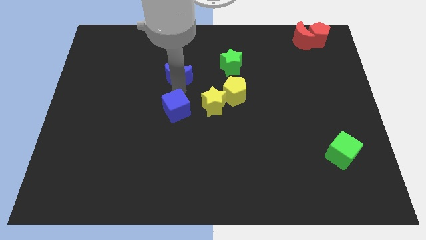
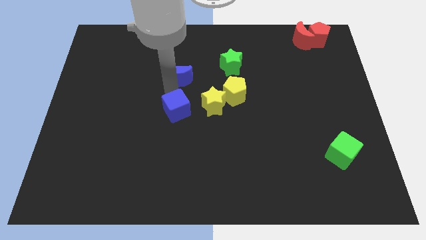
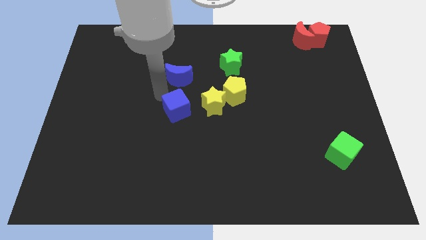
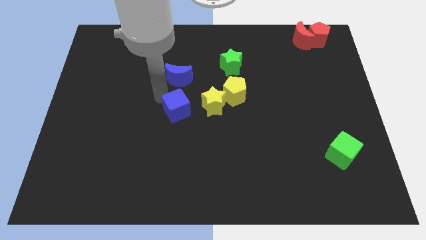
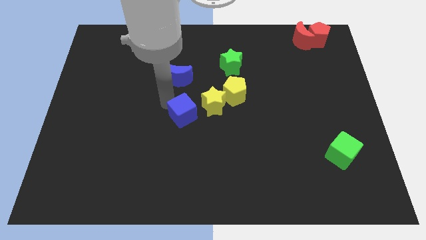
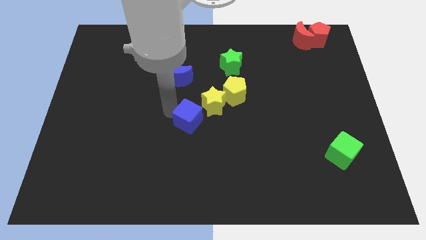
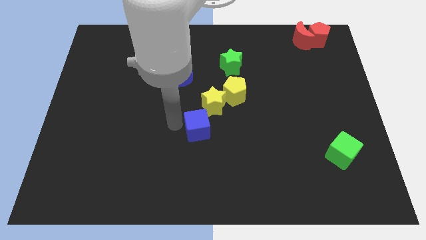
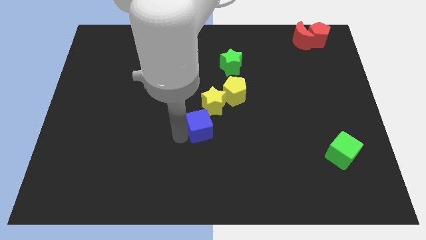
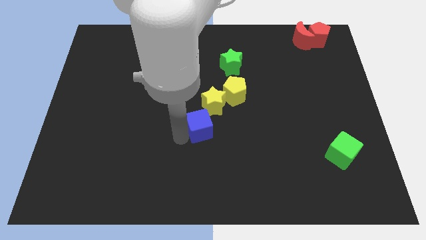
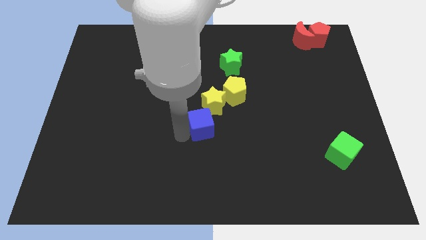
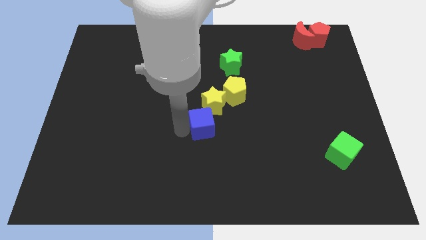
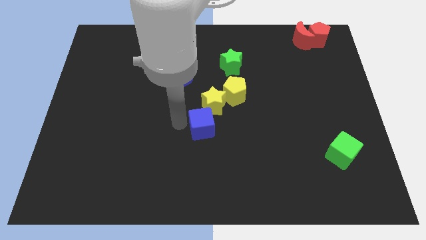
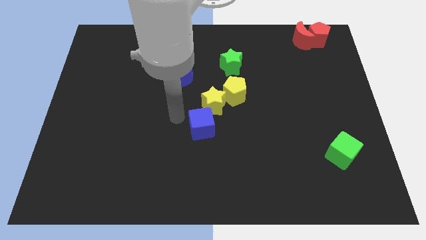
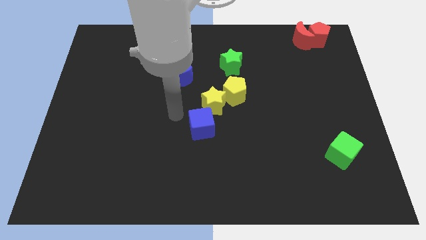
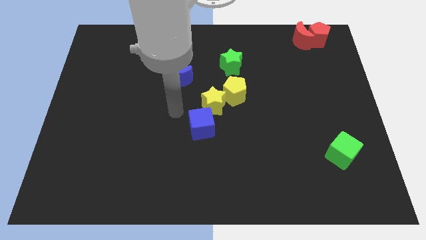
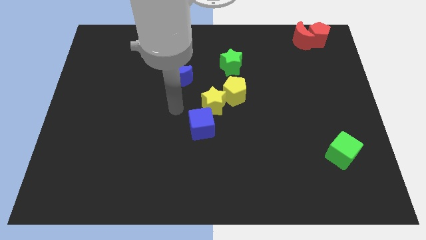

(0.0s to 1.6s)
move the blue cube bottom left to the yellow star

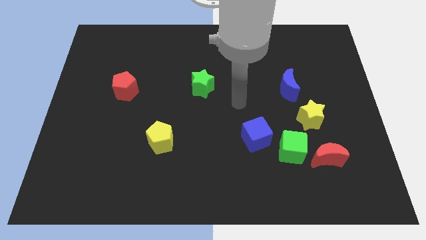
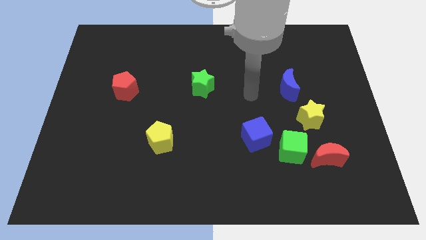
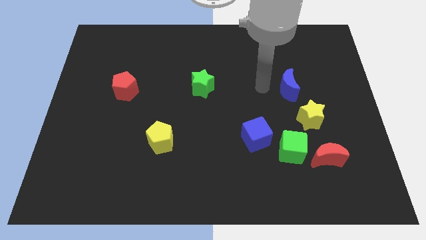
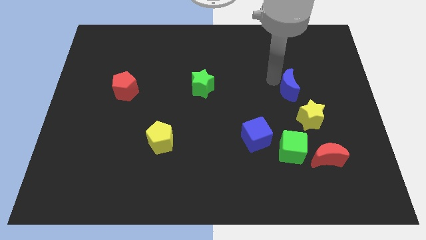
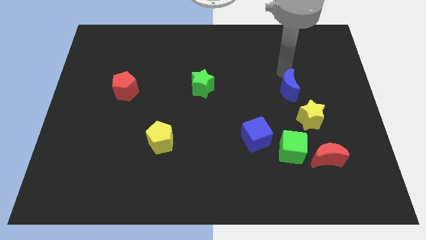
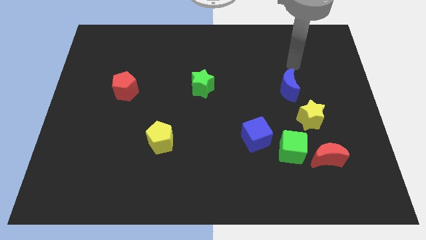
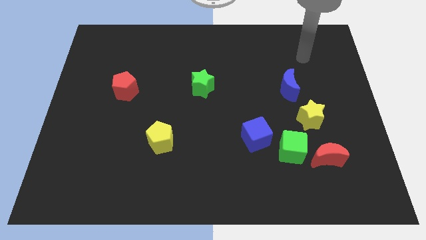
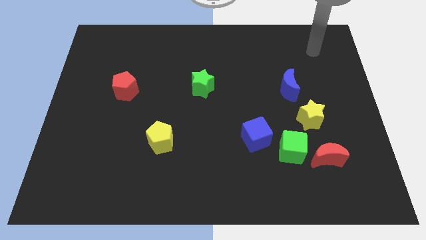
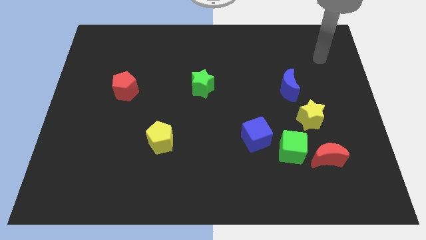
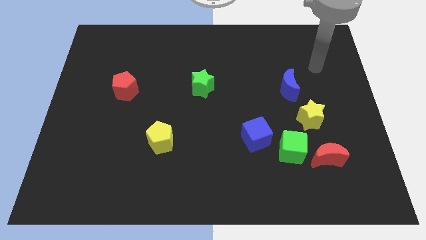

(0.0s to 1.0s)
move your arm to top right corner of board

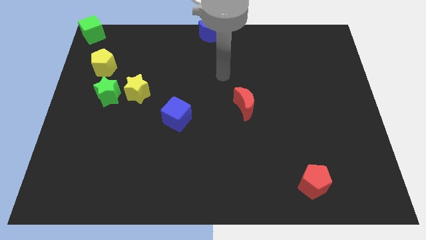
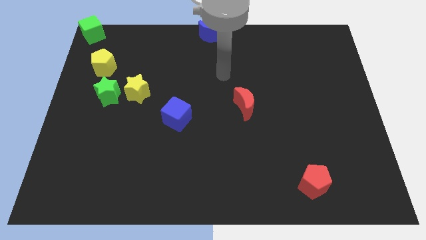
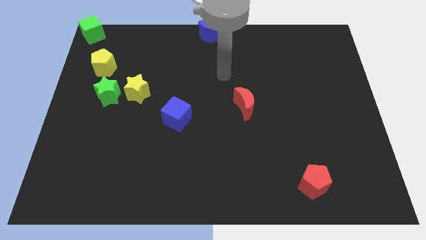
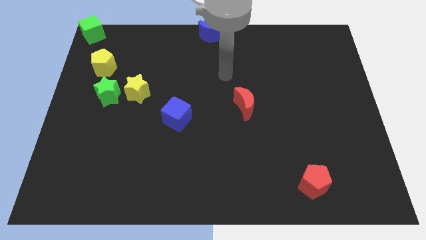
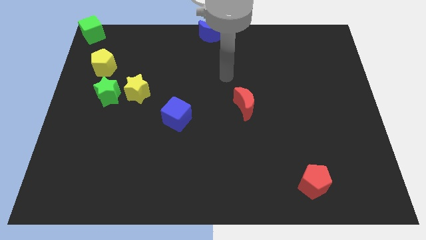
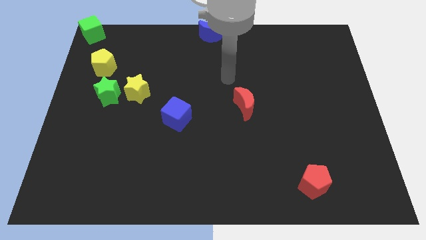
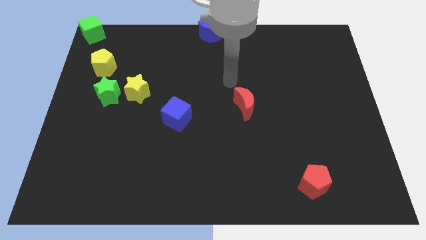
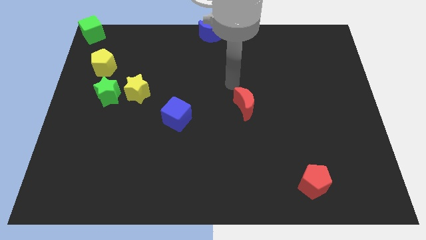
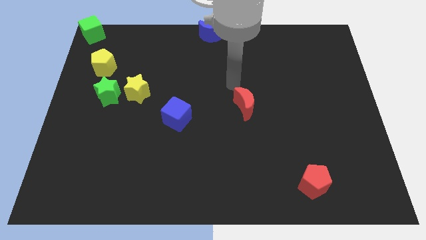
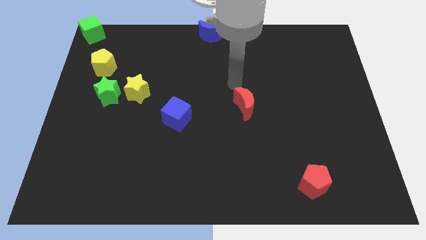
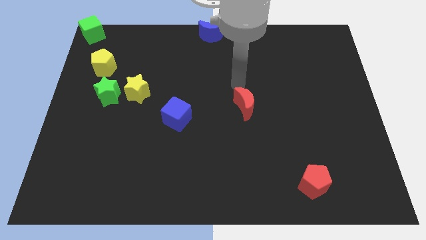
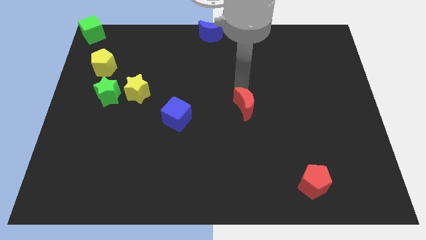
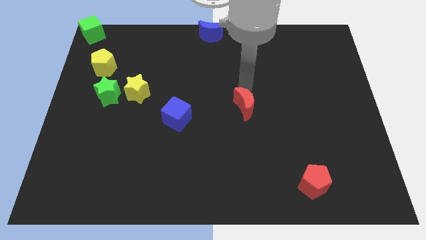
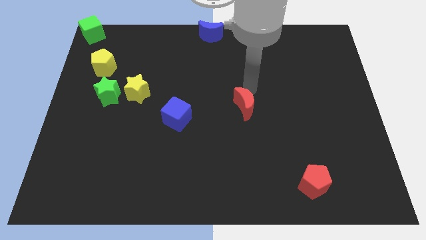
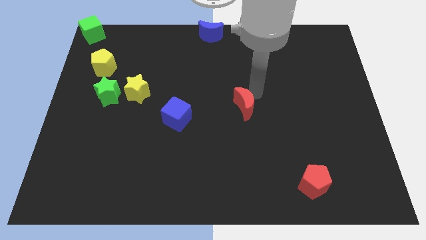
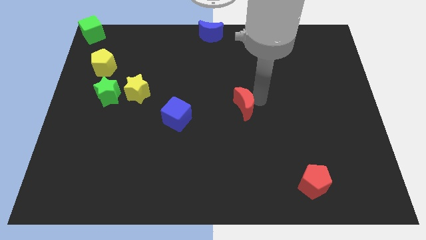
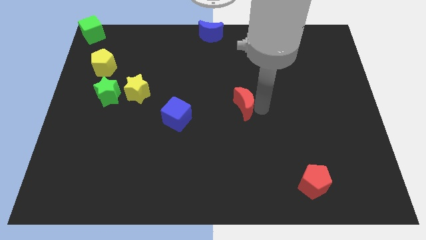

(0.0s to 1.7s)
move the arm to the right of the red moon

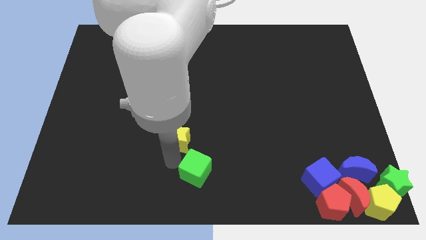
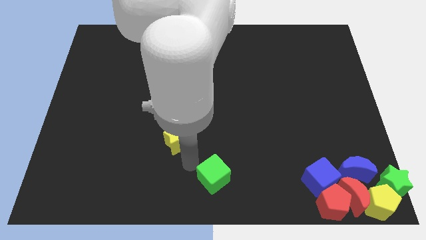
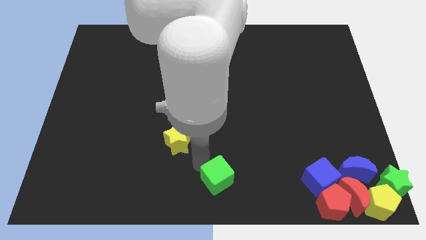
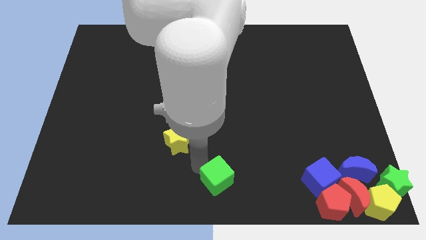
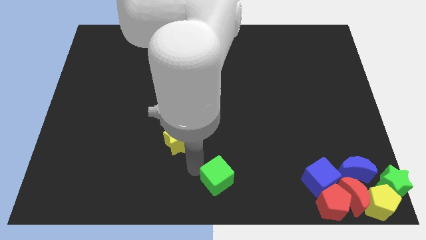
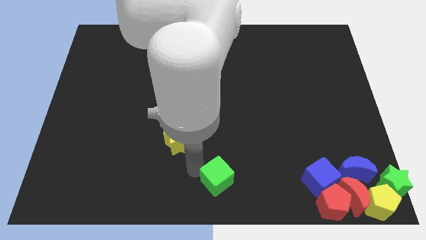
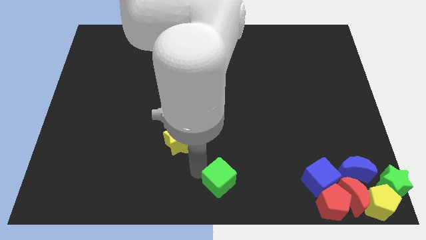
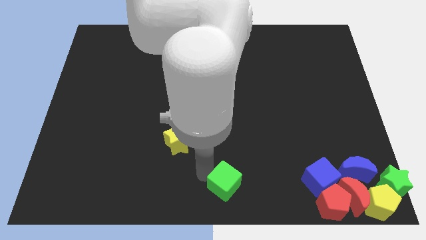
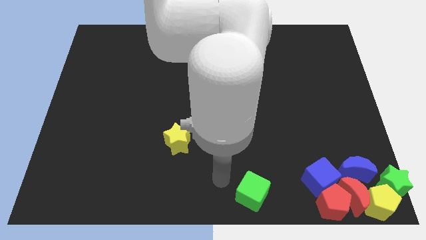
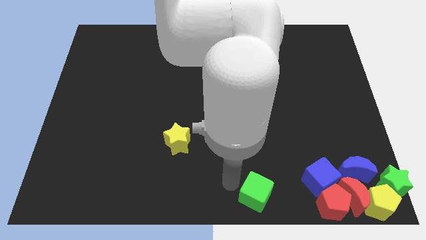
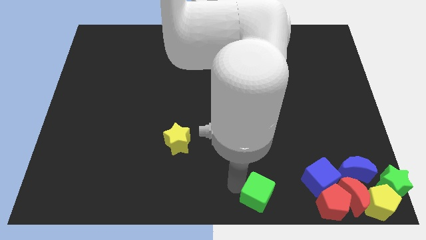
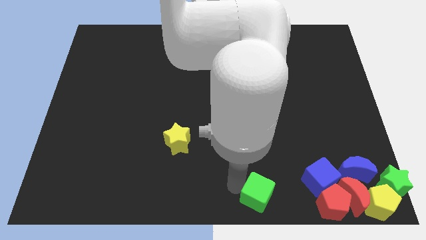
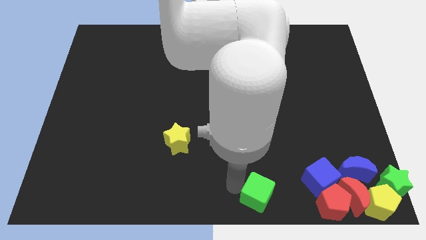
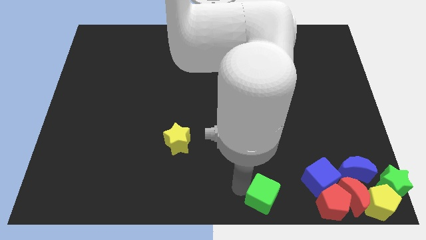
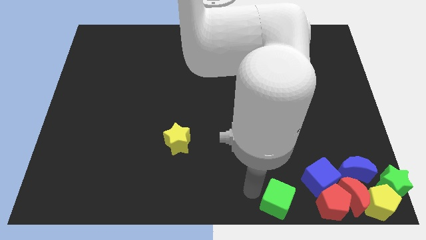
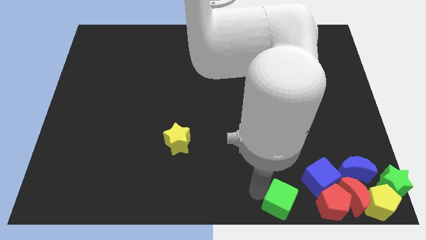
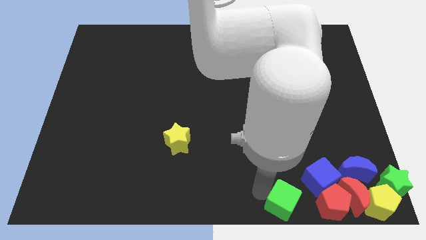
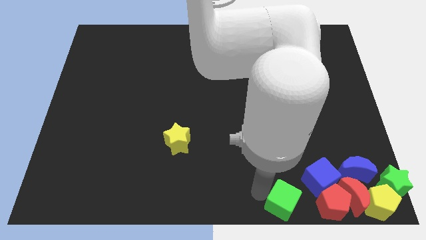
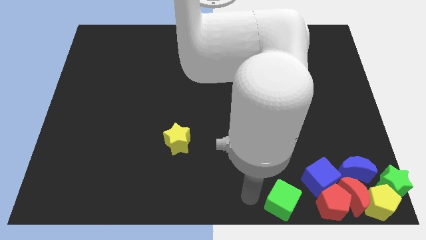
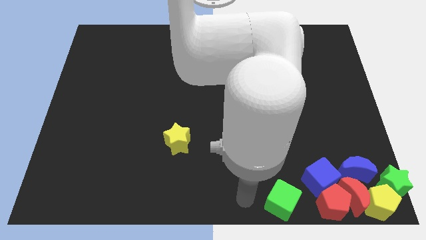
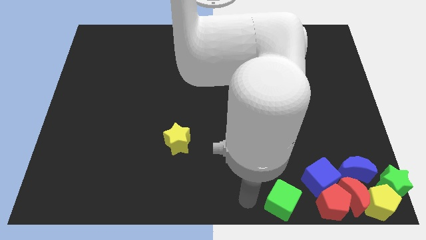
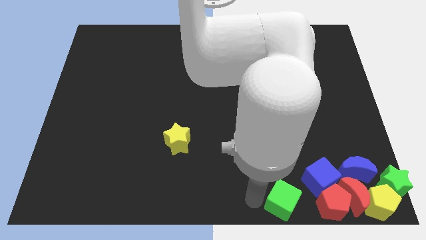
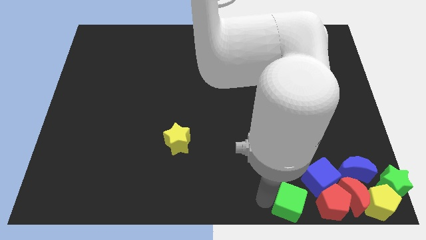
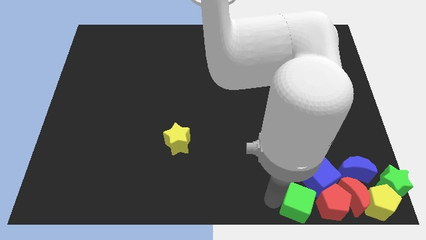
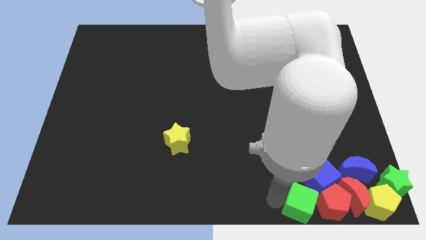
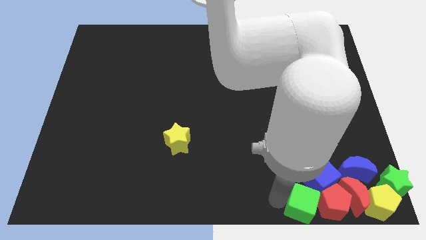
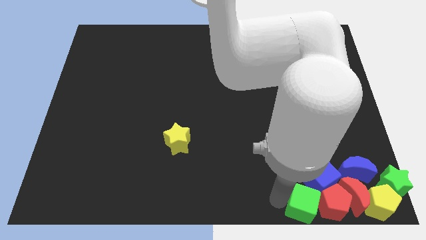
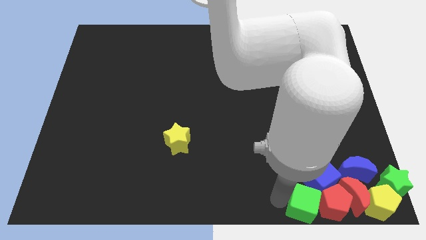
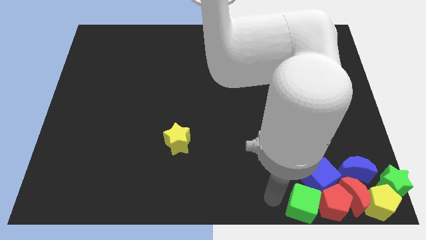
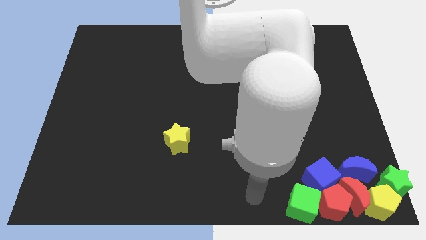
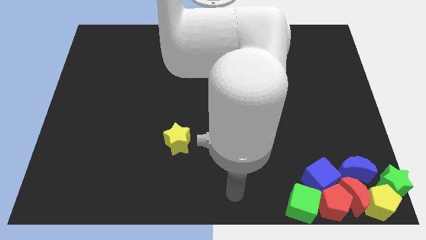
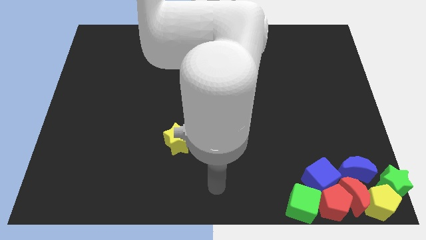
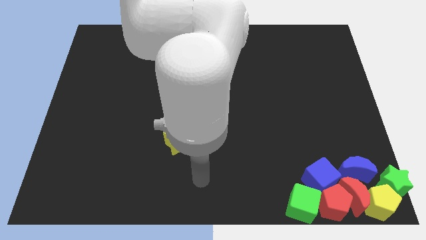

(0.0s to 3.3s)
place green block into the red pentagon

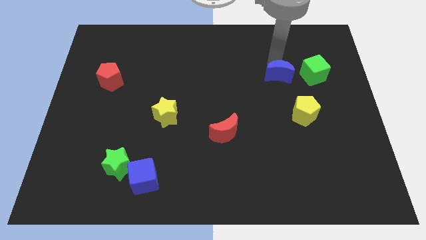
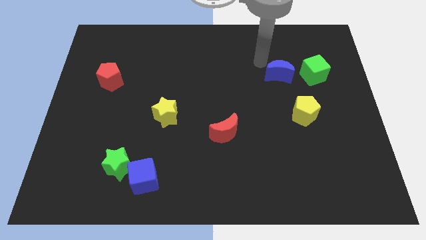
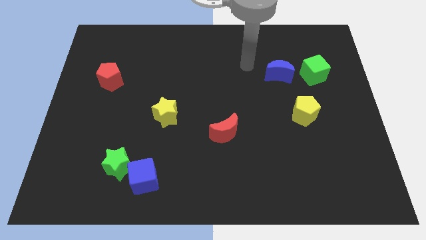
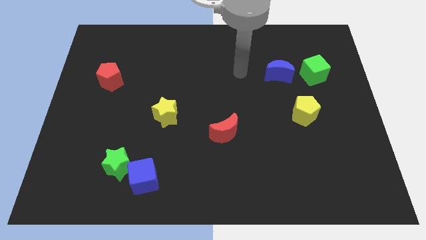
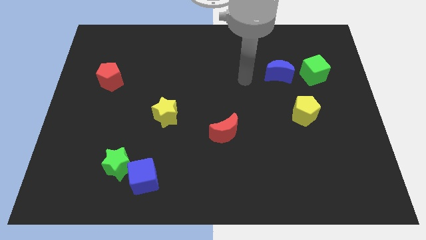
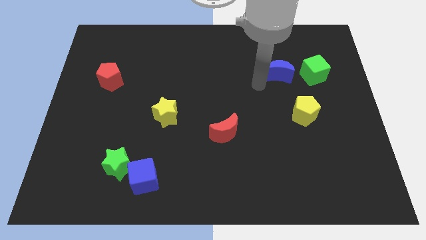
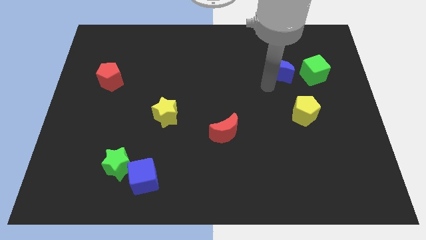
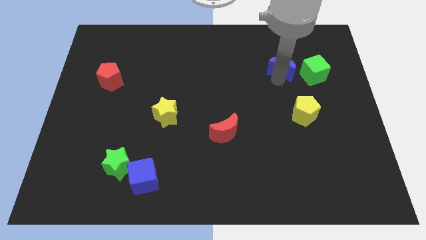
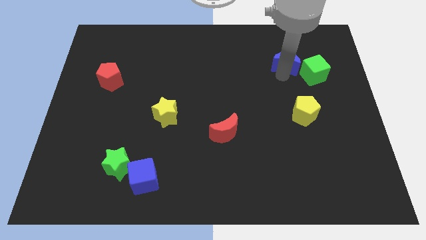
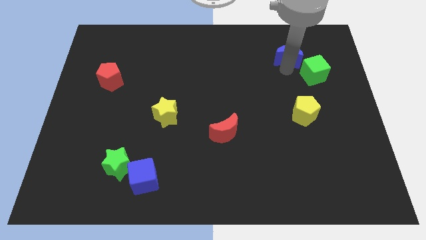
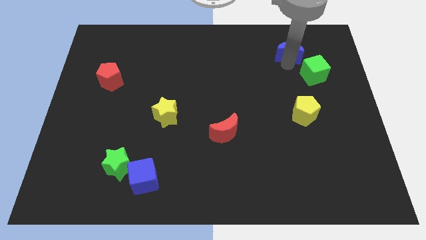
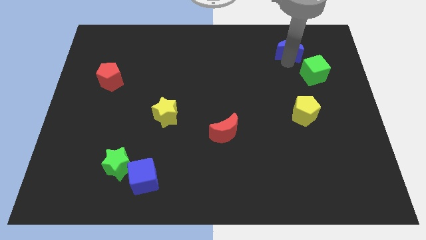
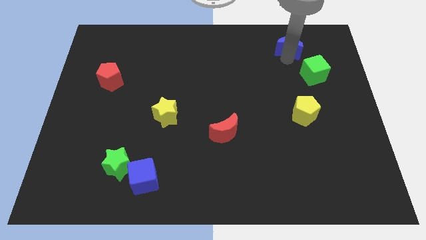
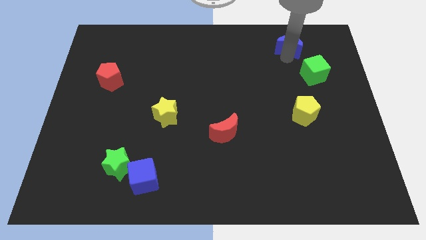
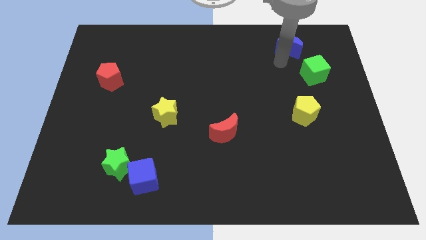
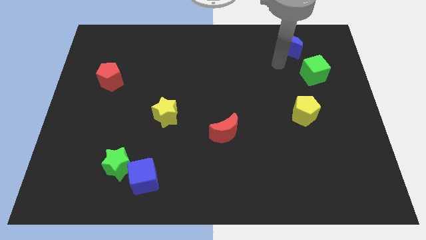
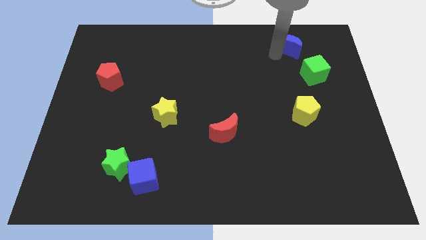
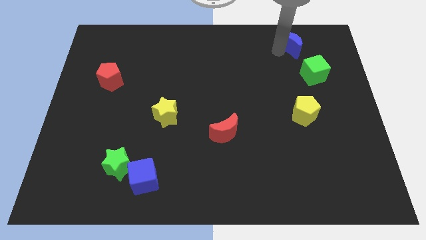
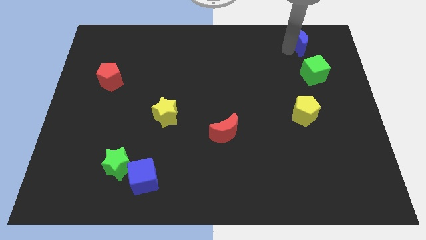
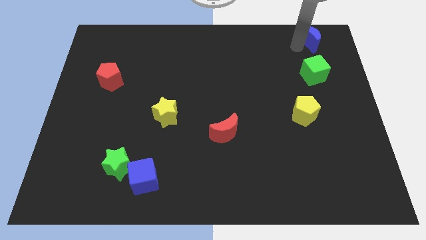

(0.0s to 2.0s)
place the blue moon above the green cube
